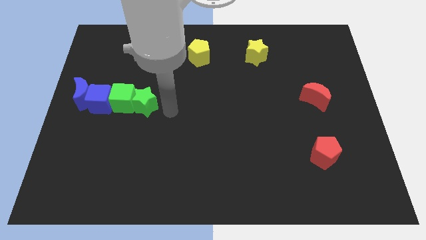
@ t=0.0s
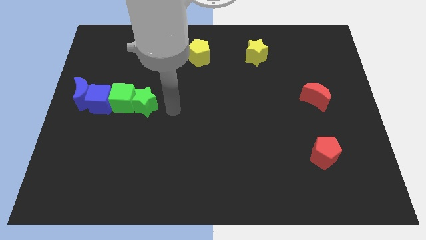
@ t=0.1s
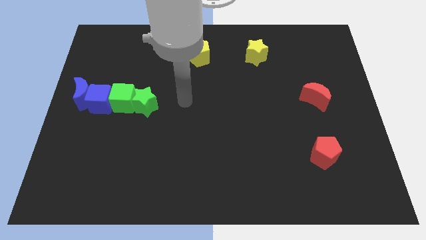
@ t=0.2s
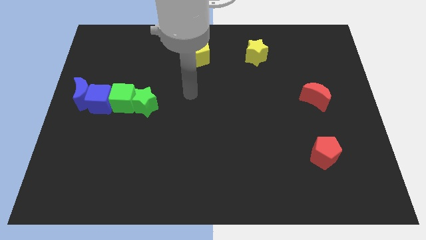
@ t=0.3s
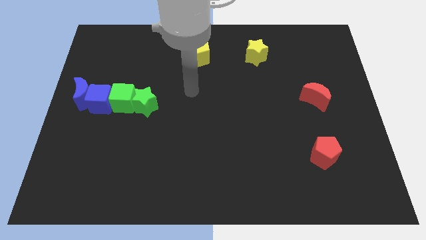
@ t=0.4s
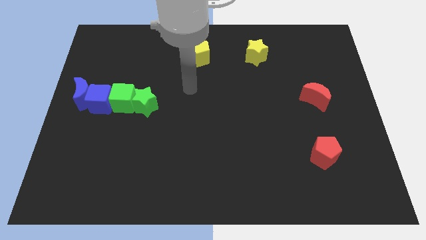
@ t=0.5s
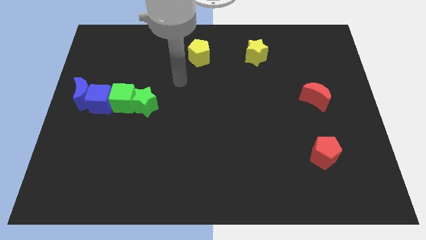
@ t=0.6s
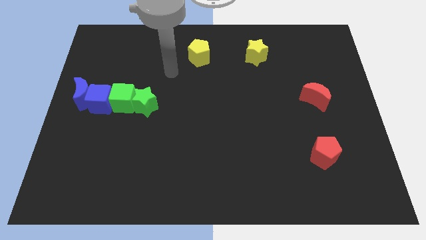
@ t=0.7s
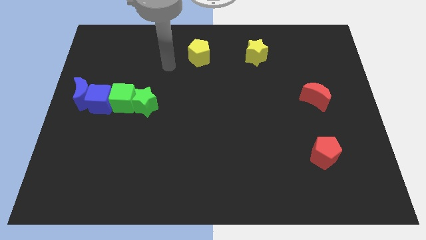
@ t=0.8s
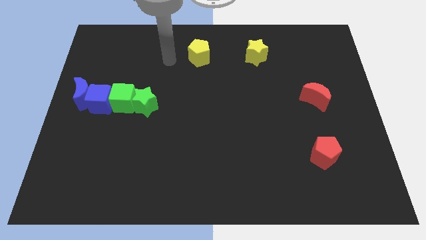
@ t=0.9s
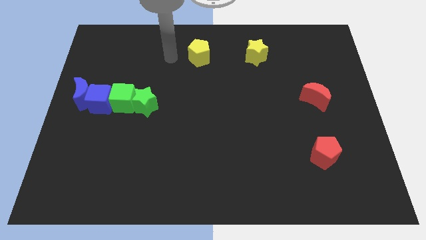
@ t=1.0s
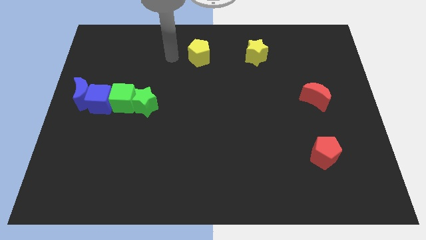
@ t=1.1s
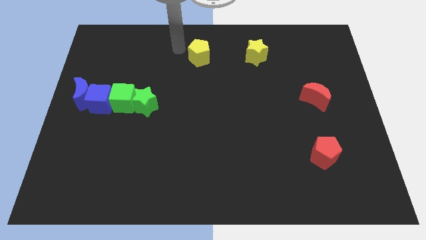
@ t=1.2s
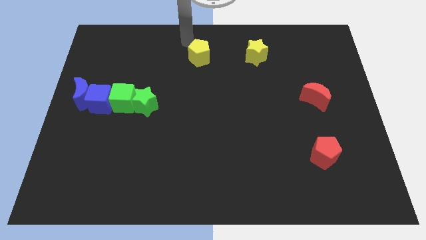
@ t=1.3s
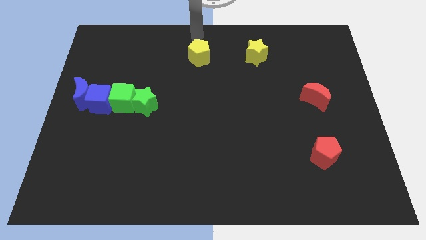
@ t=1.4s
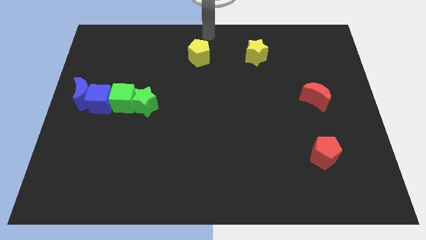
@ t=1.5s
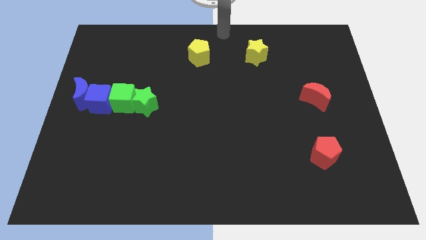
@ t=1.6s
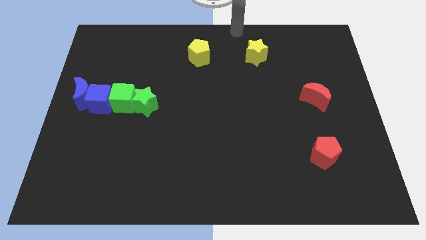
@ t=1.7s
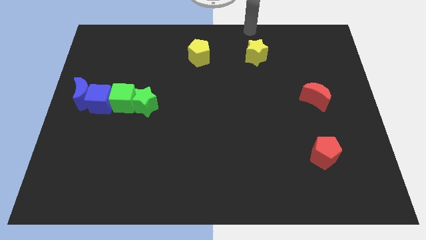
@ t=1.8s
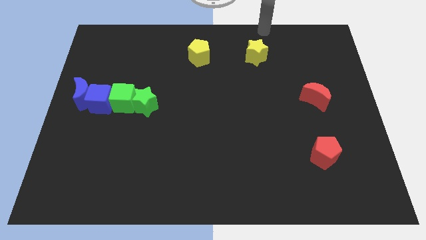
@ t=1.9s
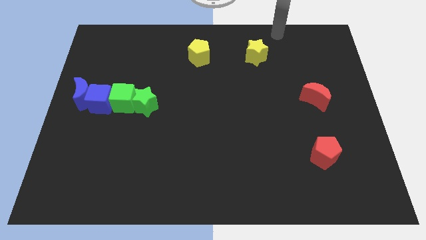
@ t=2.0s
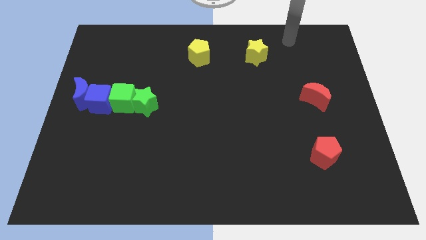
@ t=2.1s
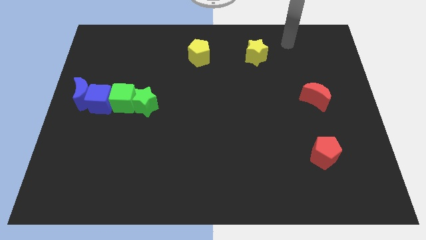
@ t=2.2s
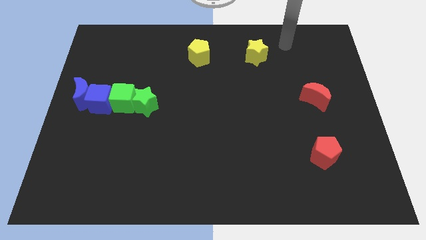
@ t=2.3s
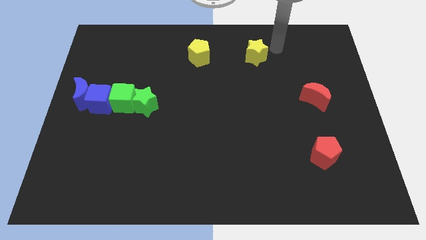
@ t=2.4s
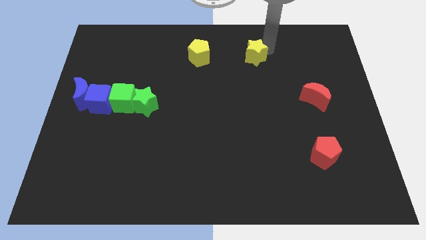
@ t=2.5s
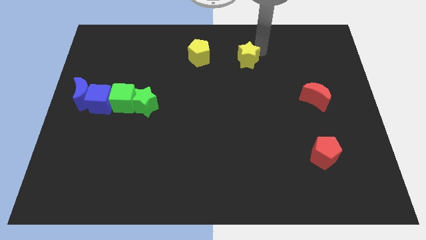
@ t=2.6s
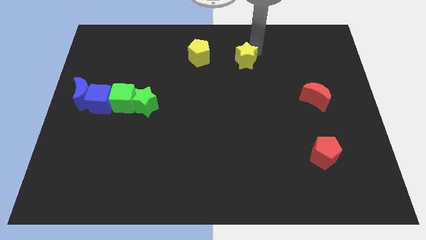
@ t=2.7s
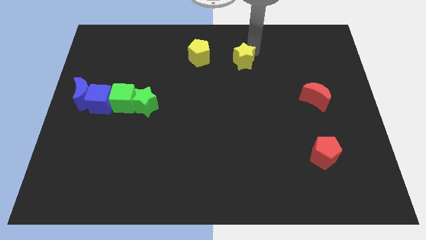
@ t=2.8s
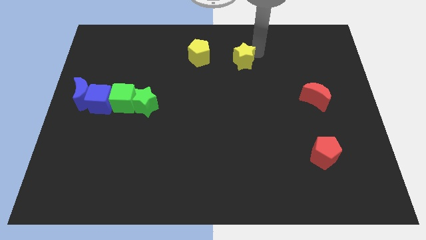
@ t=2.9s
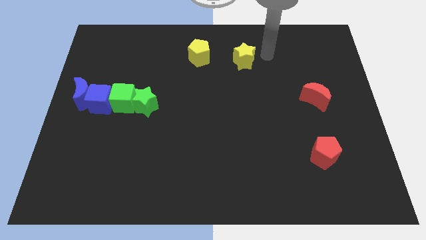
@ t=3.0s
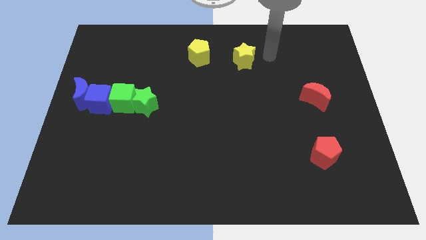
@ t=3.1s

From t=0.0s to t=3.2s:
move yellow star towards yellow pentagon

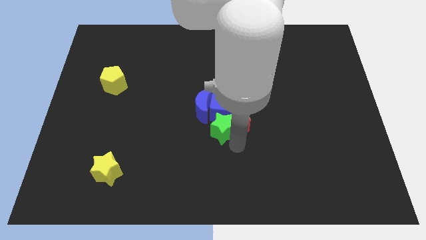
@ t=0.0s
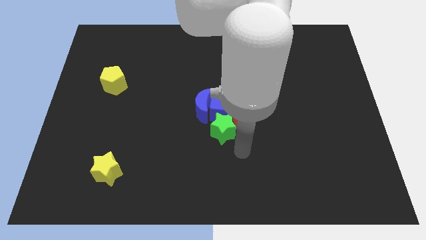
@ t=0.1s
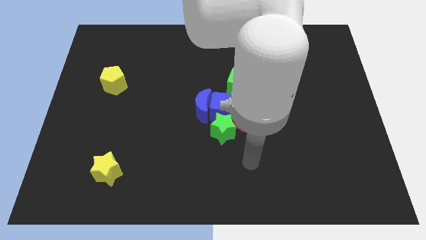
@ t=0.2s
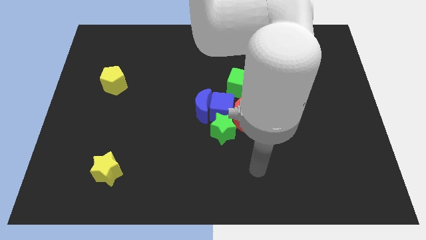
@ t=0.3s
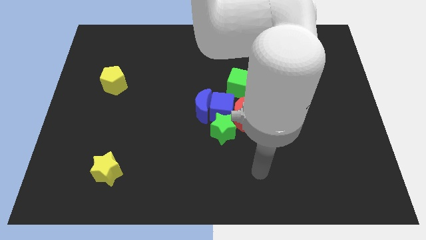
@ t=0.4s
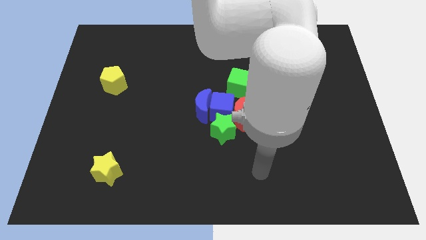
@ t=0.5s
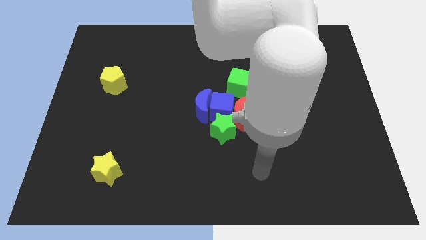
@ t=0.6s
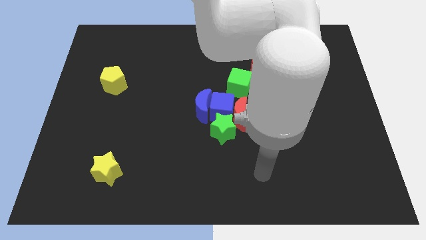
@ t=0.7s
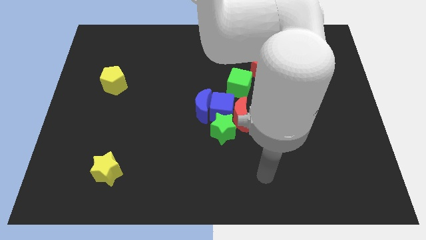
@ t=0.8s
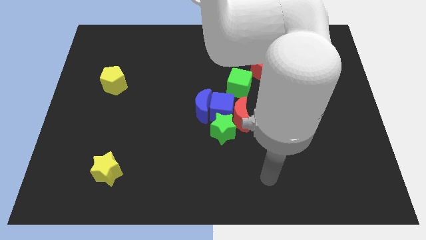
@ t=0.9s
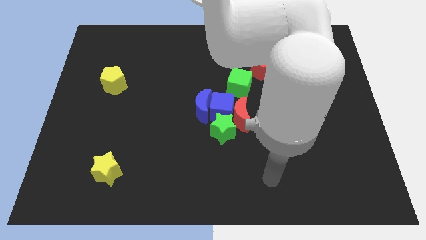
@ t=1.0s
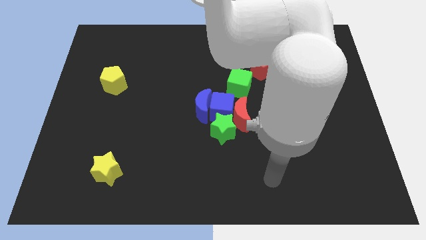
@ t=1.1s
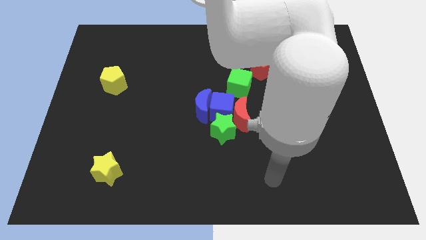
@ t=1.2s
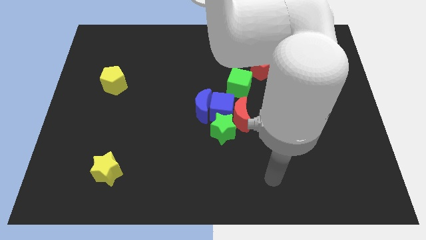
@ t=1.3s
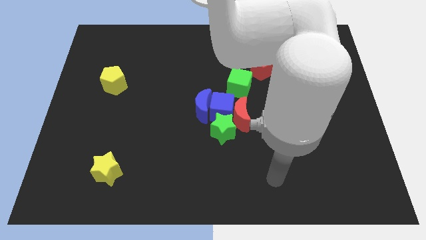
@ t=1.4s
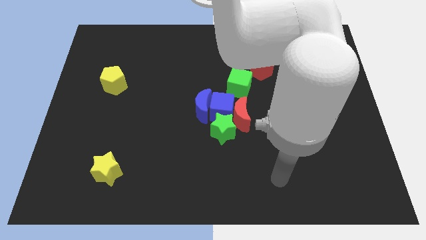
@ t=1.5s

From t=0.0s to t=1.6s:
move your arm away from the green star

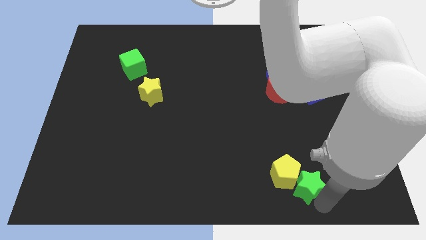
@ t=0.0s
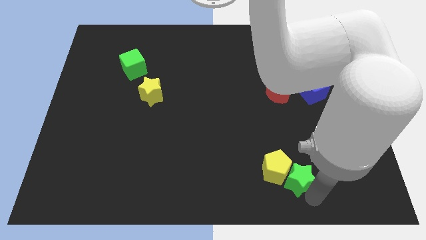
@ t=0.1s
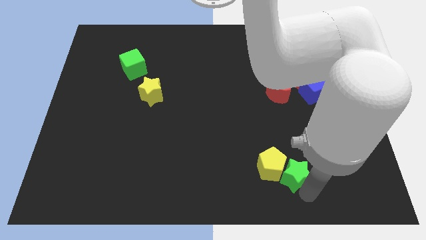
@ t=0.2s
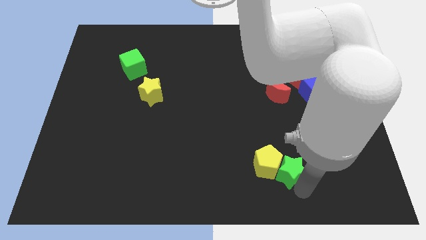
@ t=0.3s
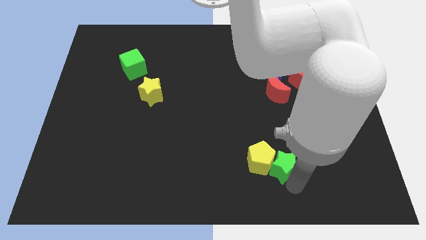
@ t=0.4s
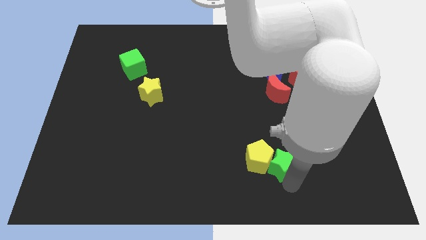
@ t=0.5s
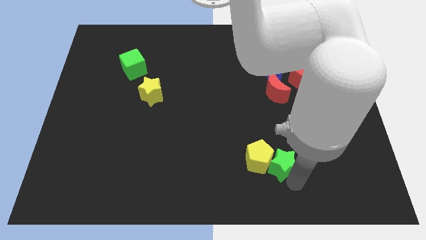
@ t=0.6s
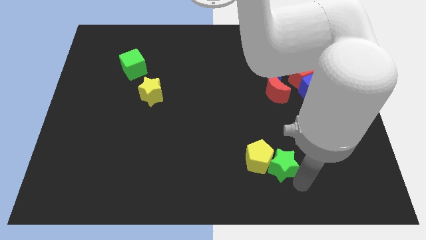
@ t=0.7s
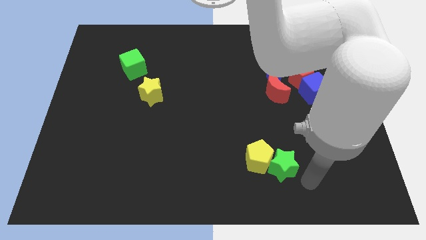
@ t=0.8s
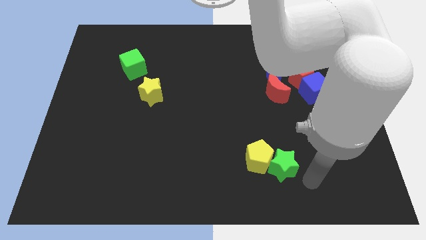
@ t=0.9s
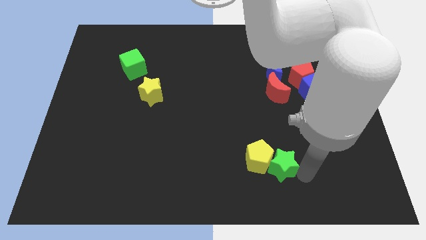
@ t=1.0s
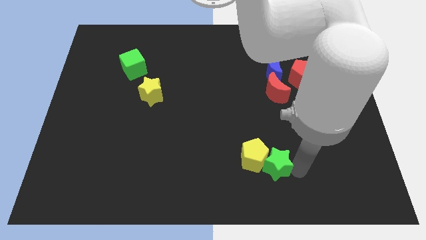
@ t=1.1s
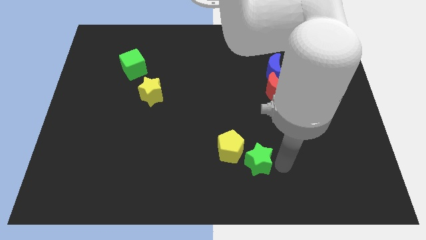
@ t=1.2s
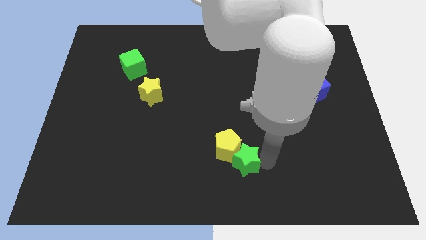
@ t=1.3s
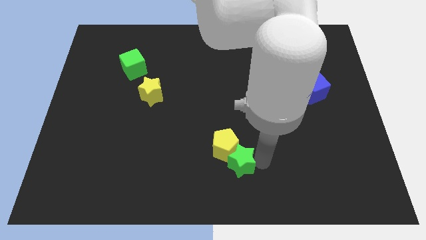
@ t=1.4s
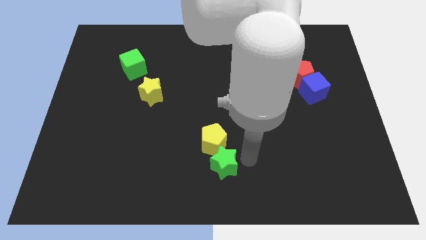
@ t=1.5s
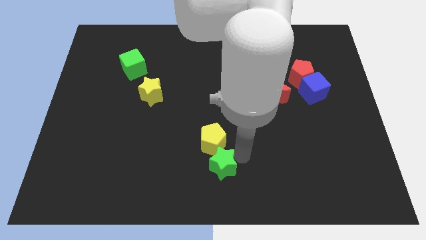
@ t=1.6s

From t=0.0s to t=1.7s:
move the yellow pentagon and green star slightly up

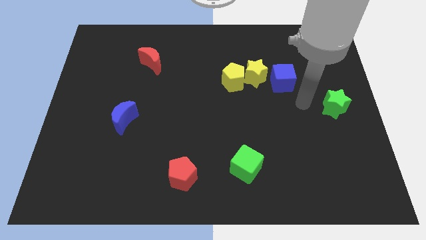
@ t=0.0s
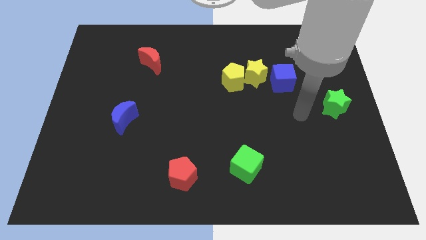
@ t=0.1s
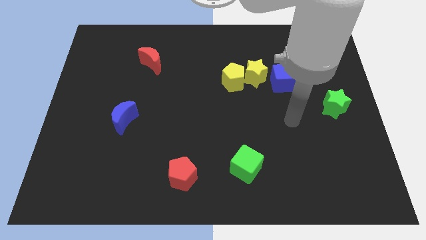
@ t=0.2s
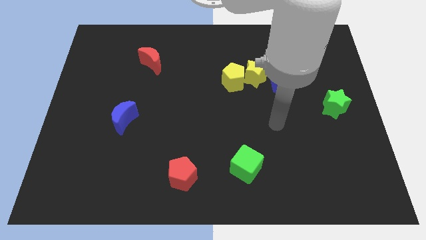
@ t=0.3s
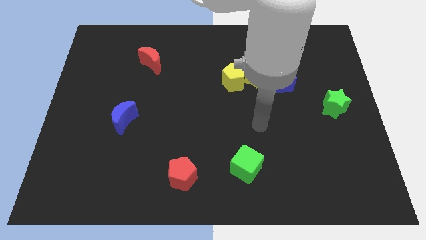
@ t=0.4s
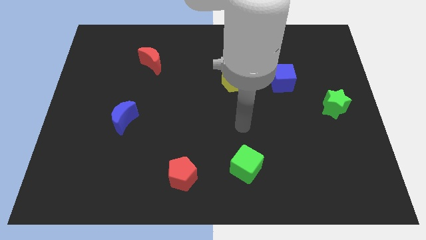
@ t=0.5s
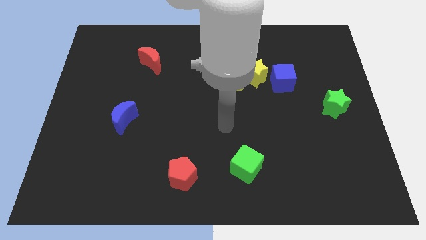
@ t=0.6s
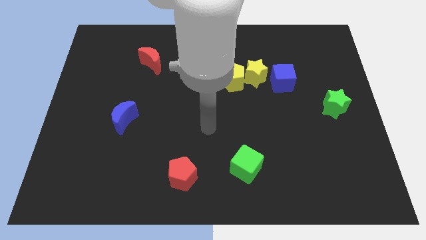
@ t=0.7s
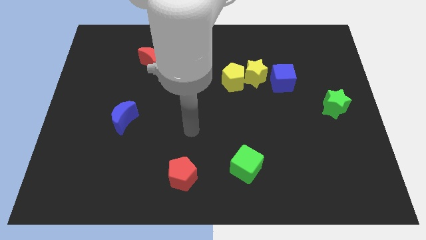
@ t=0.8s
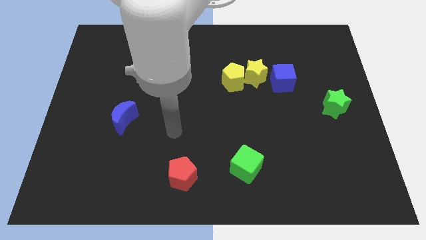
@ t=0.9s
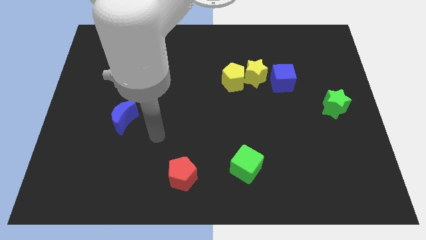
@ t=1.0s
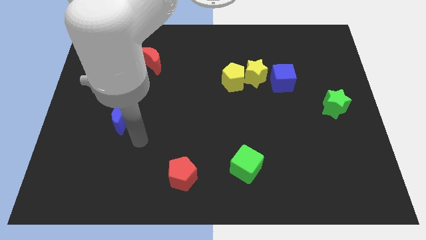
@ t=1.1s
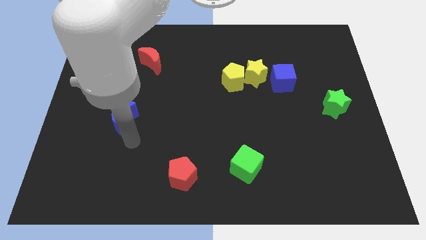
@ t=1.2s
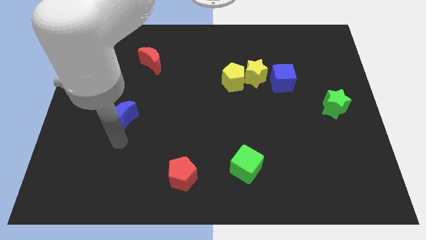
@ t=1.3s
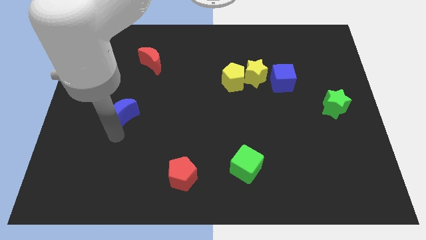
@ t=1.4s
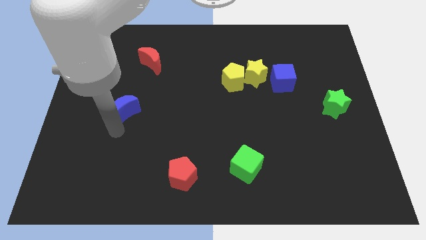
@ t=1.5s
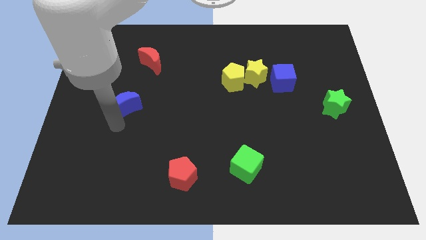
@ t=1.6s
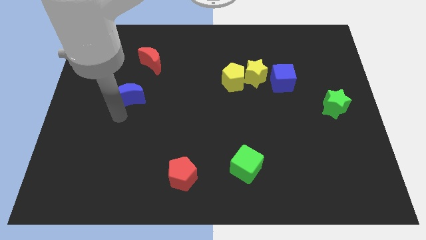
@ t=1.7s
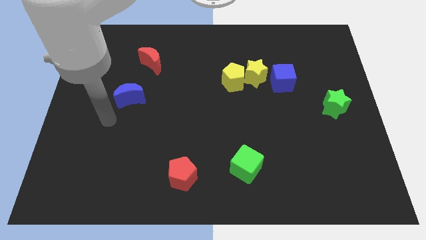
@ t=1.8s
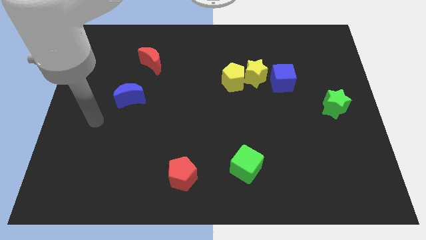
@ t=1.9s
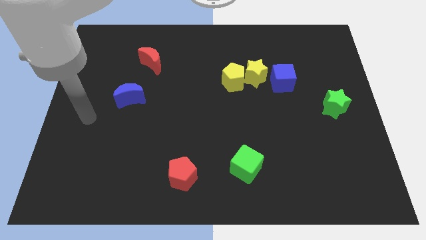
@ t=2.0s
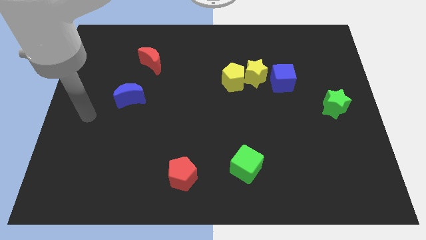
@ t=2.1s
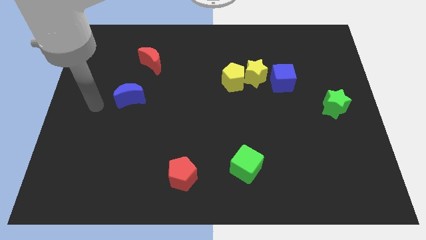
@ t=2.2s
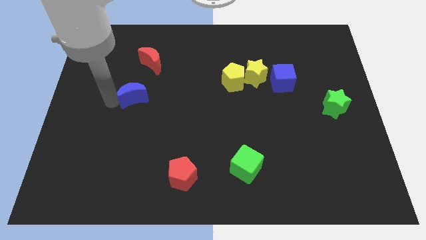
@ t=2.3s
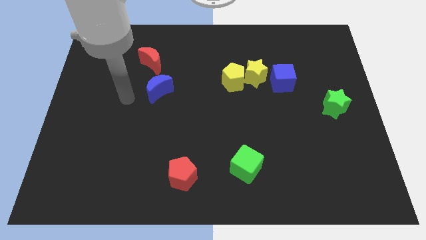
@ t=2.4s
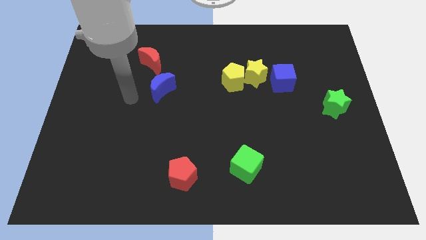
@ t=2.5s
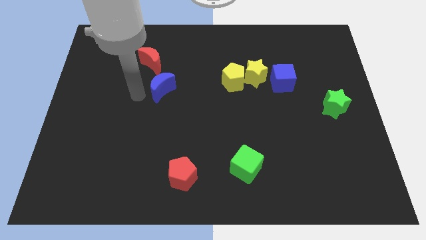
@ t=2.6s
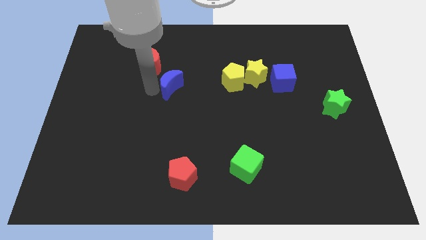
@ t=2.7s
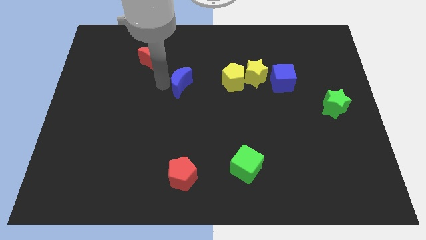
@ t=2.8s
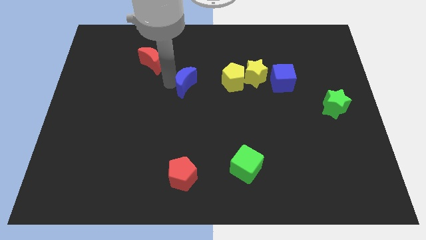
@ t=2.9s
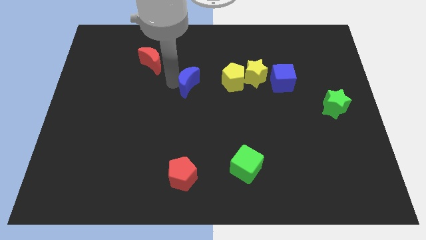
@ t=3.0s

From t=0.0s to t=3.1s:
move the blue crescent towards the yellow pentagon
